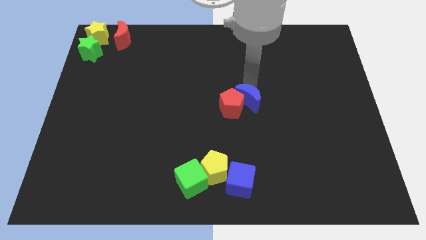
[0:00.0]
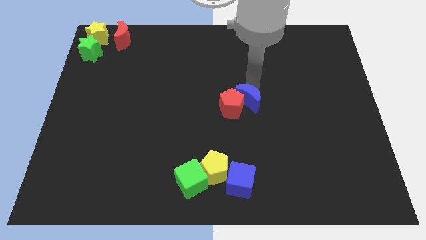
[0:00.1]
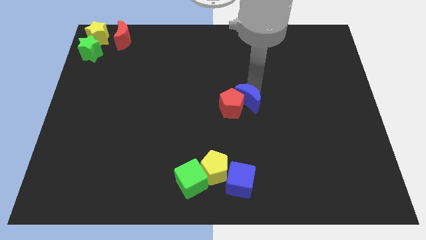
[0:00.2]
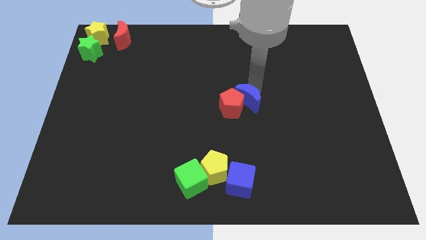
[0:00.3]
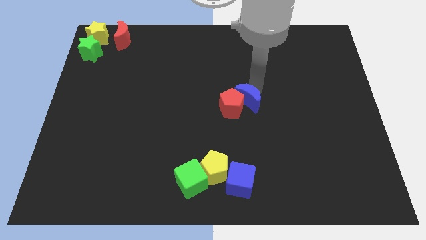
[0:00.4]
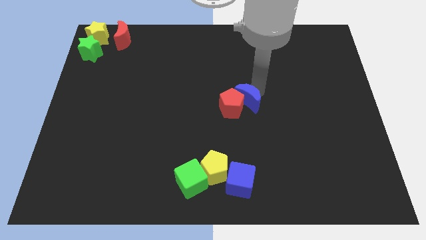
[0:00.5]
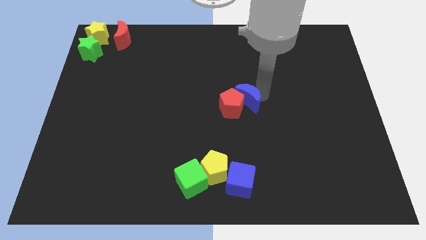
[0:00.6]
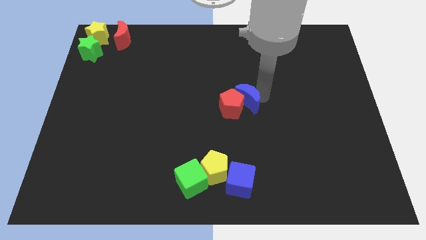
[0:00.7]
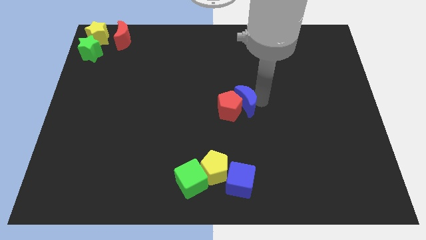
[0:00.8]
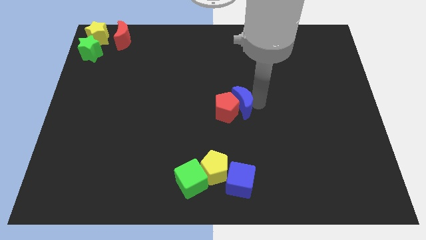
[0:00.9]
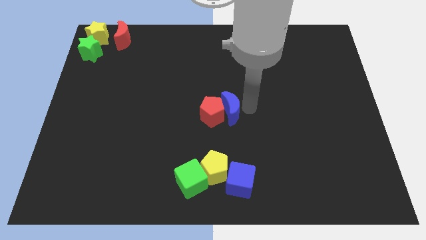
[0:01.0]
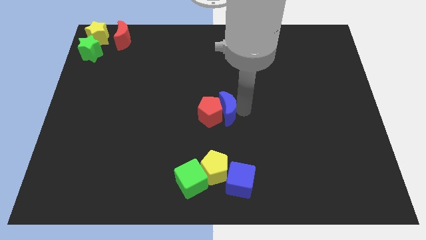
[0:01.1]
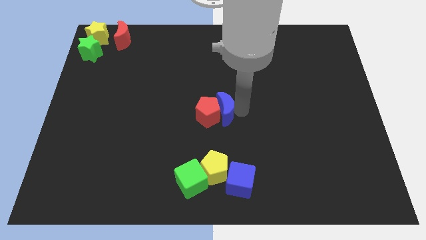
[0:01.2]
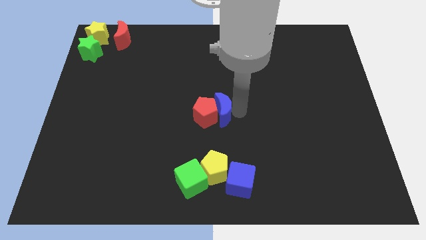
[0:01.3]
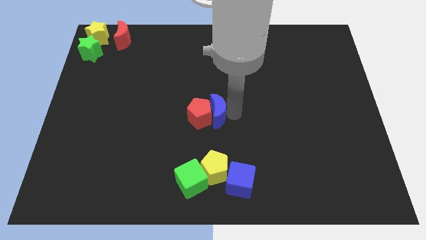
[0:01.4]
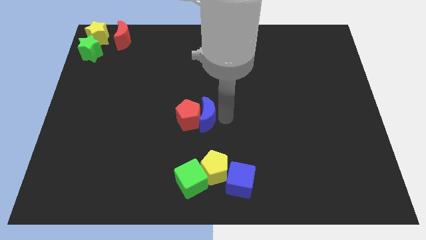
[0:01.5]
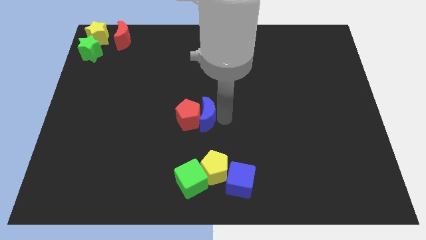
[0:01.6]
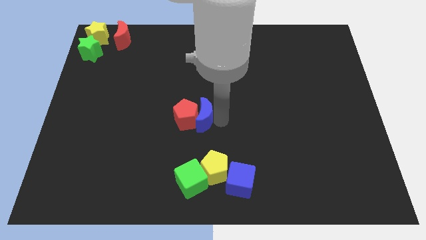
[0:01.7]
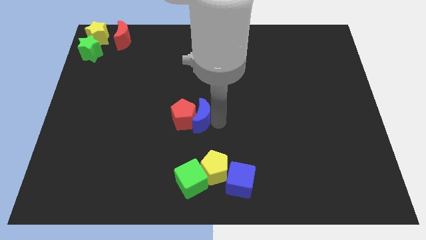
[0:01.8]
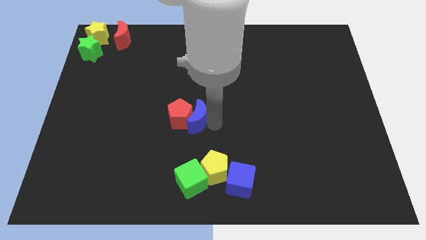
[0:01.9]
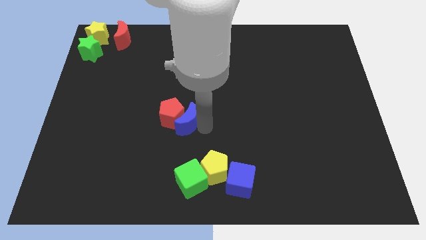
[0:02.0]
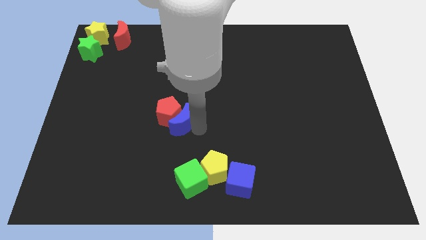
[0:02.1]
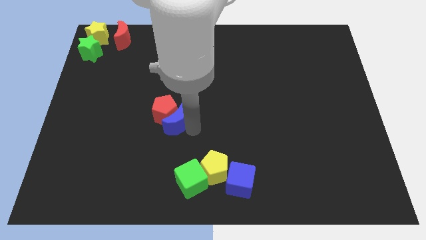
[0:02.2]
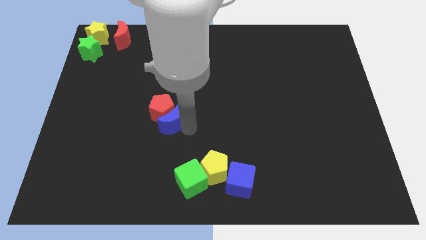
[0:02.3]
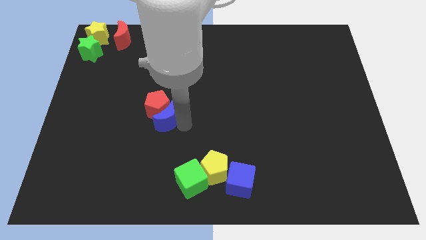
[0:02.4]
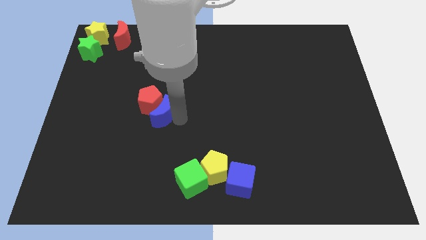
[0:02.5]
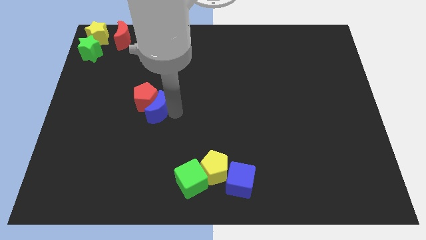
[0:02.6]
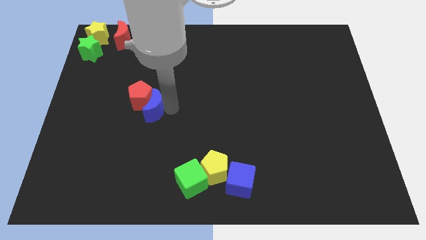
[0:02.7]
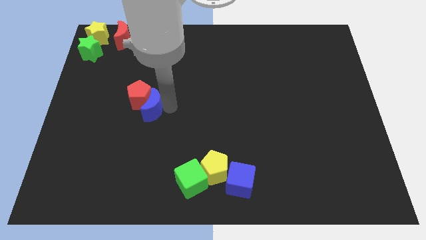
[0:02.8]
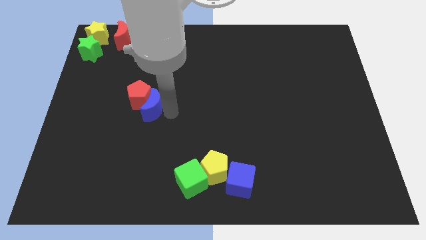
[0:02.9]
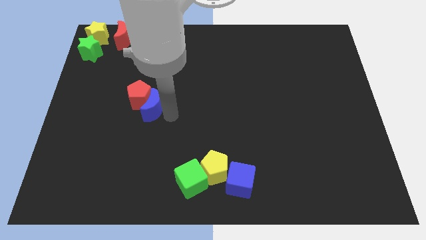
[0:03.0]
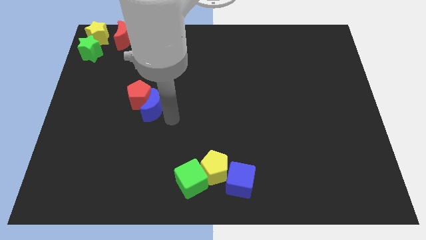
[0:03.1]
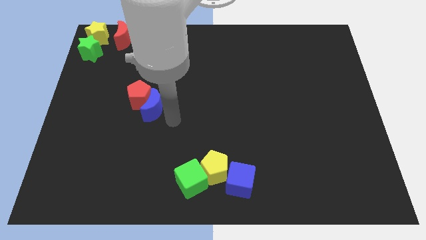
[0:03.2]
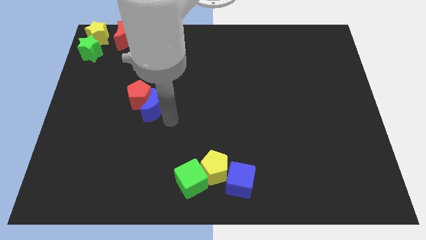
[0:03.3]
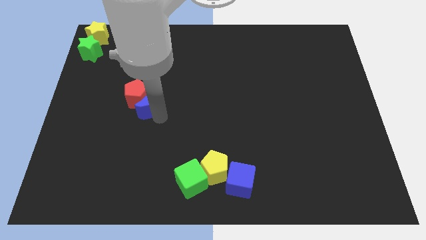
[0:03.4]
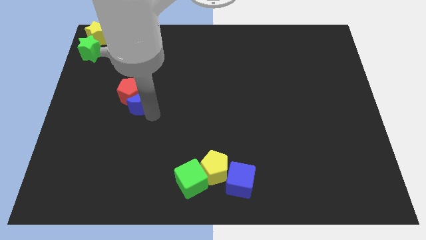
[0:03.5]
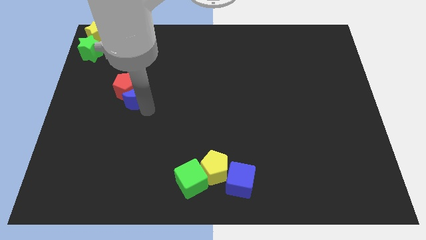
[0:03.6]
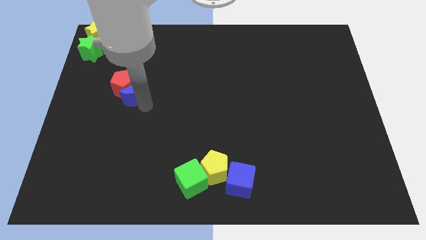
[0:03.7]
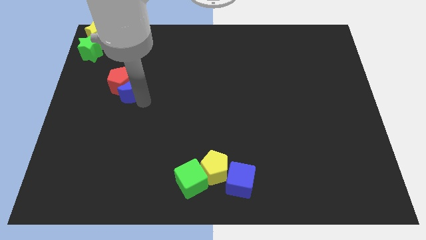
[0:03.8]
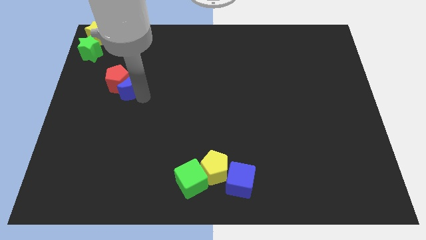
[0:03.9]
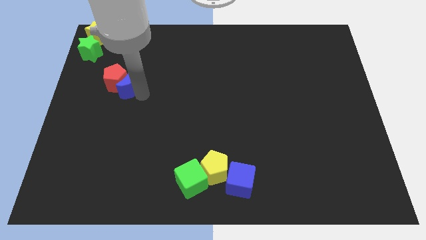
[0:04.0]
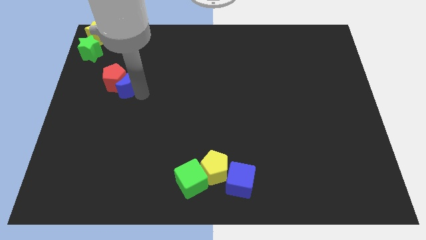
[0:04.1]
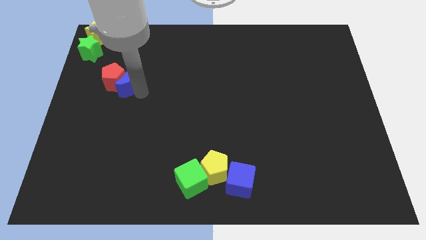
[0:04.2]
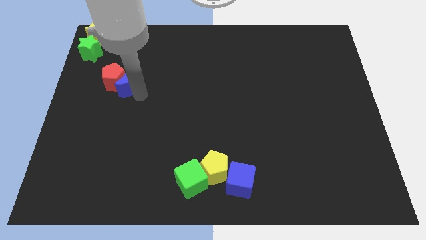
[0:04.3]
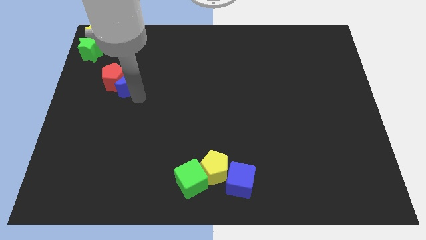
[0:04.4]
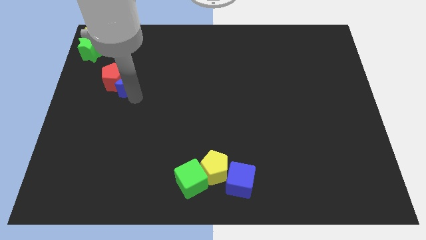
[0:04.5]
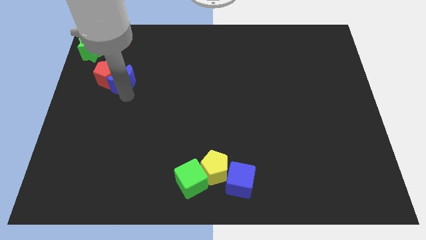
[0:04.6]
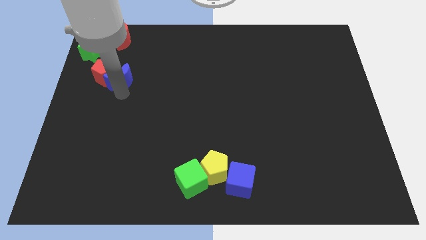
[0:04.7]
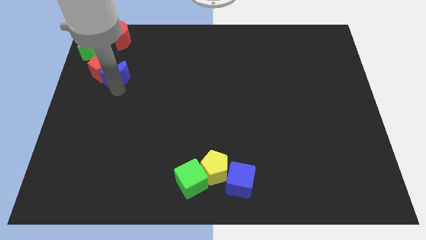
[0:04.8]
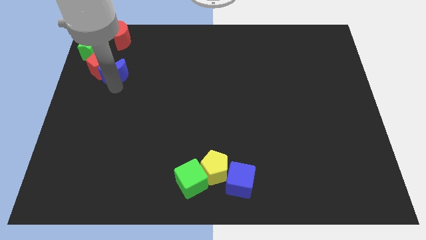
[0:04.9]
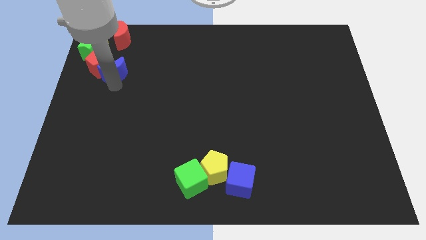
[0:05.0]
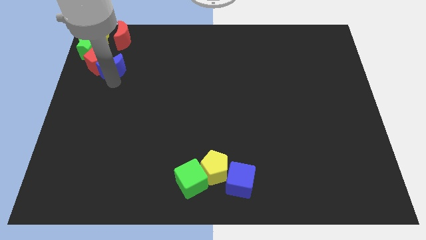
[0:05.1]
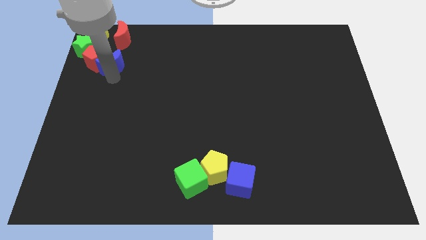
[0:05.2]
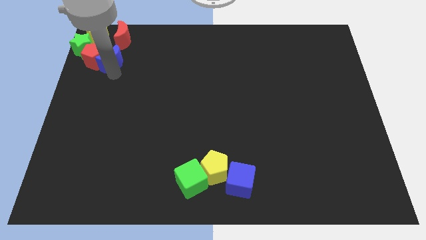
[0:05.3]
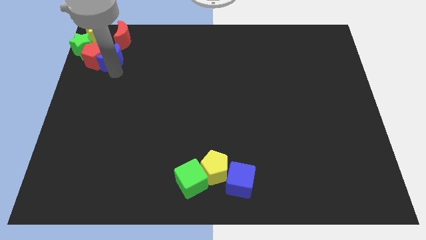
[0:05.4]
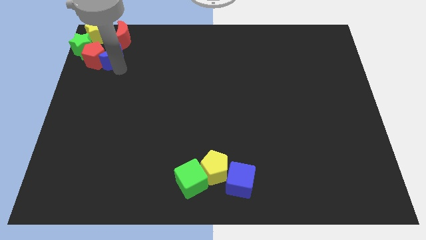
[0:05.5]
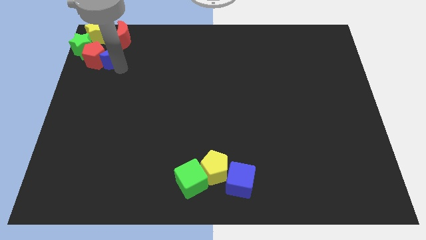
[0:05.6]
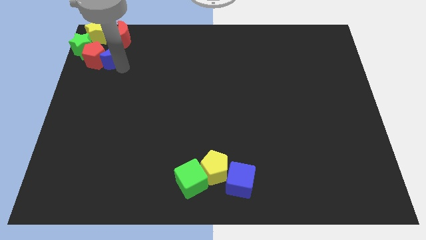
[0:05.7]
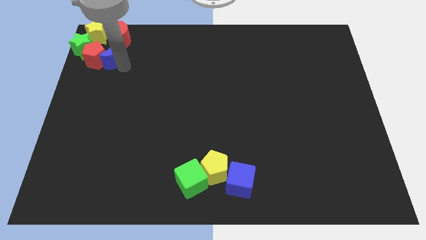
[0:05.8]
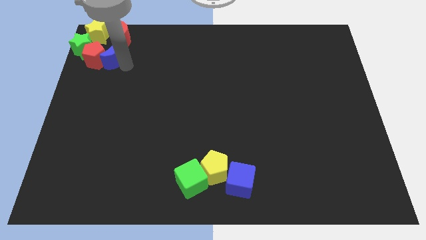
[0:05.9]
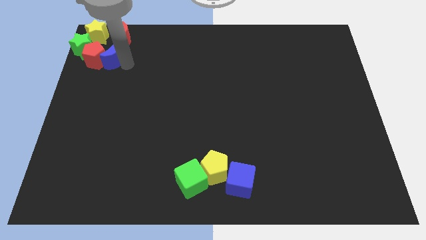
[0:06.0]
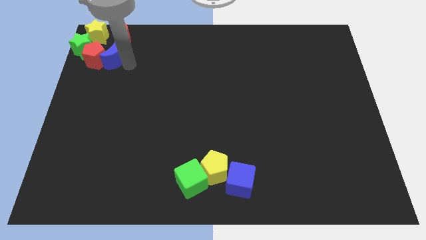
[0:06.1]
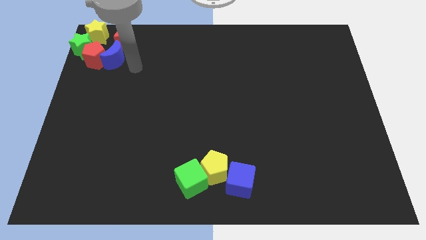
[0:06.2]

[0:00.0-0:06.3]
push the red pentagon and blue moon together to the top left corner

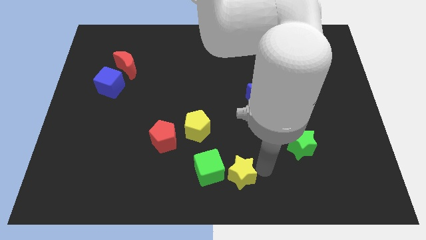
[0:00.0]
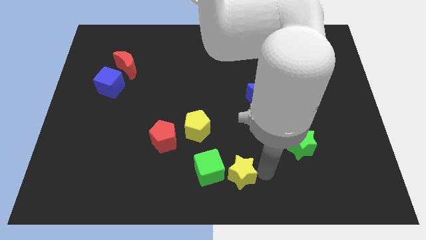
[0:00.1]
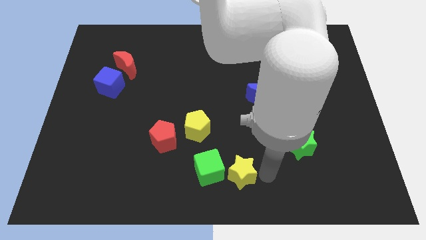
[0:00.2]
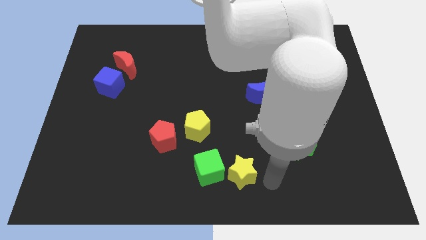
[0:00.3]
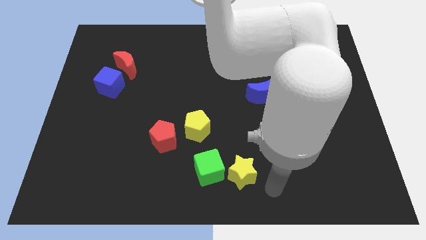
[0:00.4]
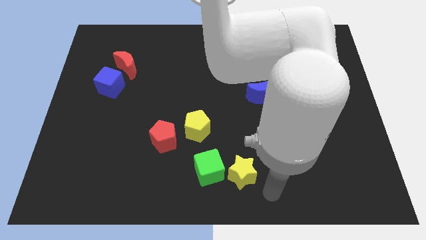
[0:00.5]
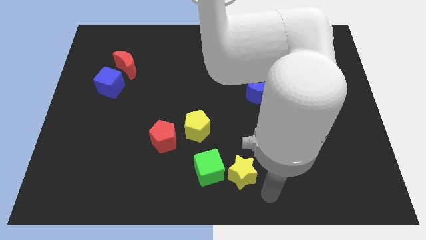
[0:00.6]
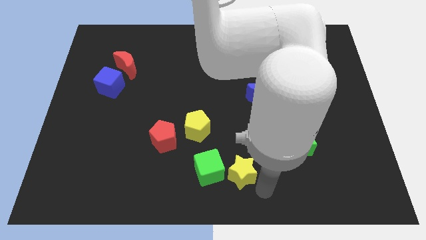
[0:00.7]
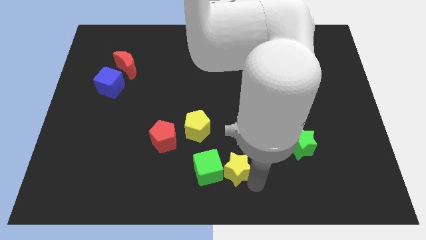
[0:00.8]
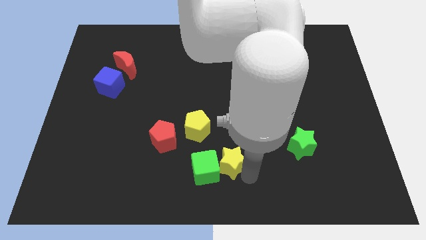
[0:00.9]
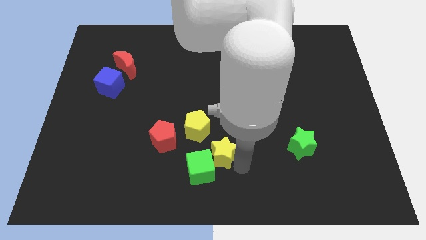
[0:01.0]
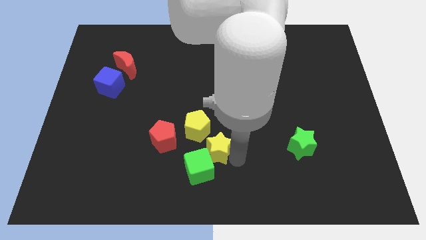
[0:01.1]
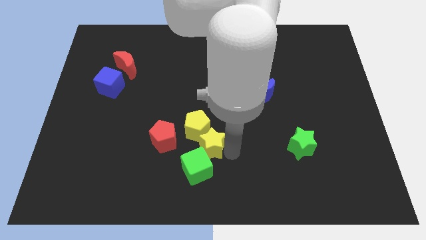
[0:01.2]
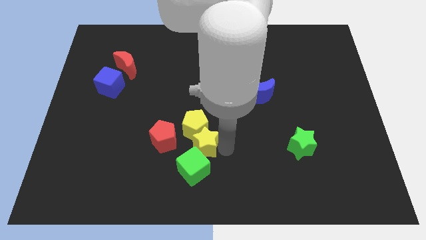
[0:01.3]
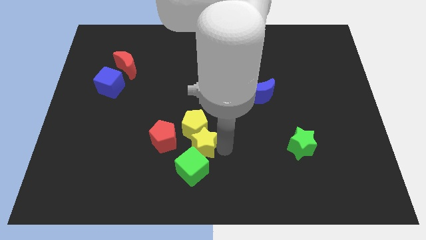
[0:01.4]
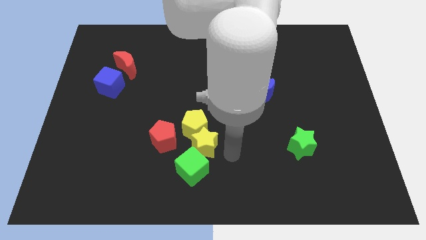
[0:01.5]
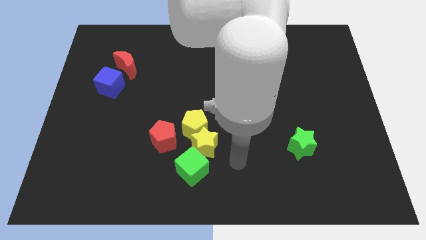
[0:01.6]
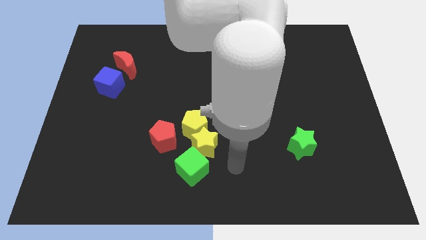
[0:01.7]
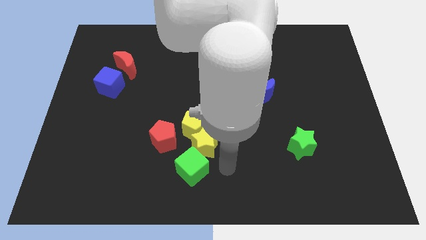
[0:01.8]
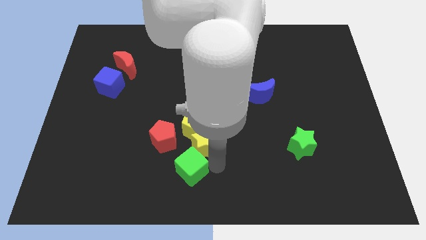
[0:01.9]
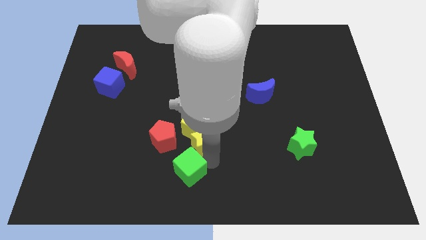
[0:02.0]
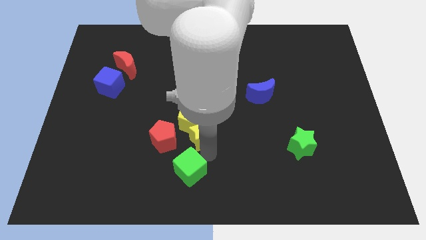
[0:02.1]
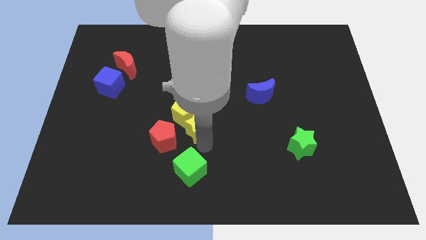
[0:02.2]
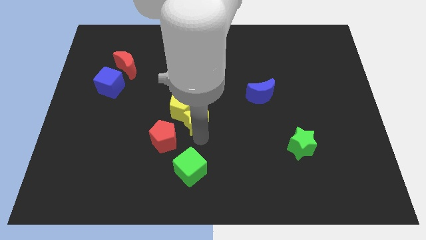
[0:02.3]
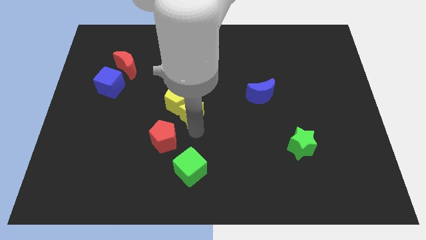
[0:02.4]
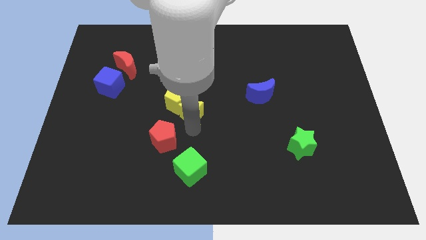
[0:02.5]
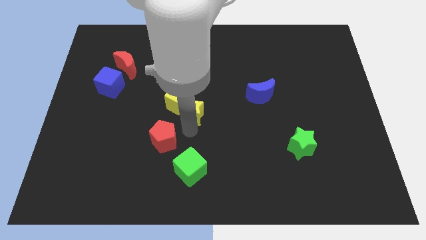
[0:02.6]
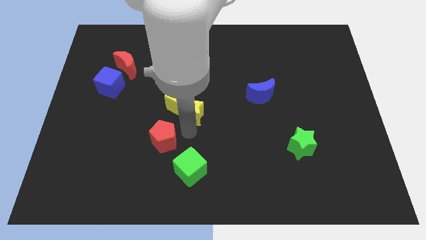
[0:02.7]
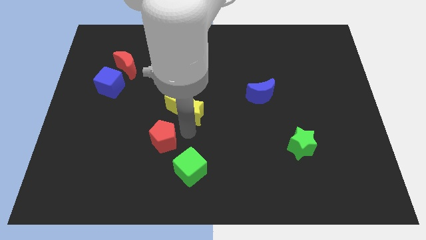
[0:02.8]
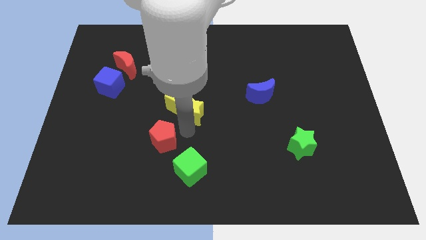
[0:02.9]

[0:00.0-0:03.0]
slightly push yellow blocks diagonally up
